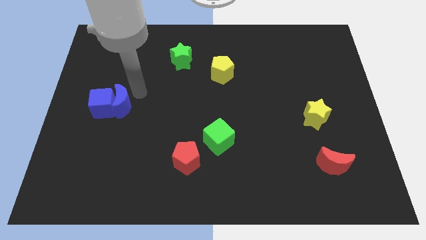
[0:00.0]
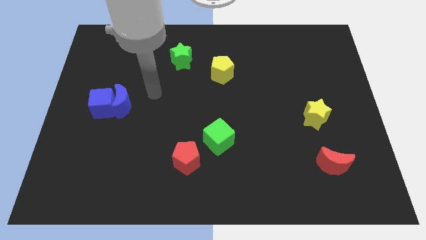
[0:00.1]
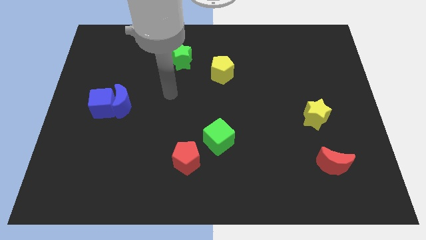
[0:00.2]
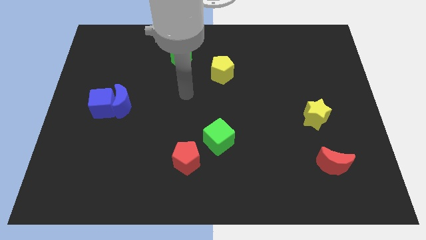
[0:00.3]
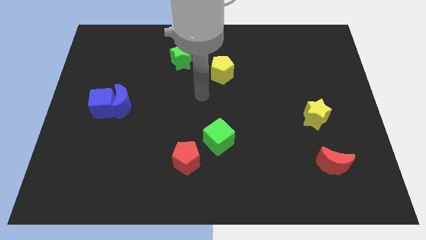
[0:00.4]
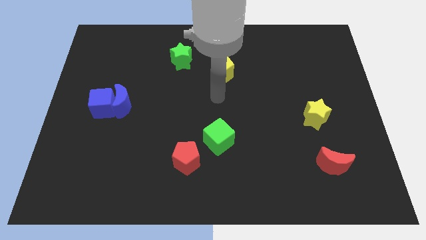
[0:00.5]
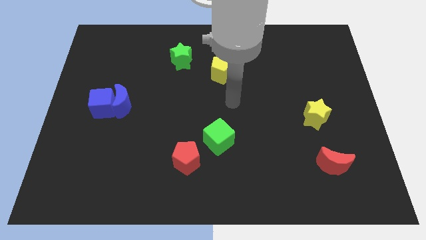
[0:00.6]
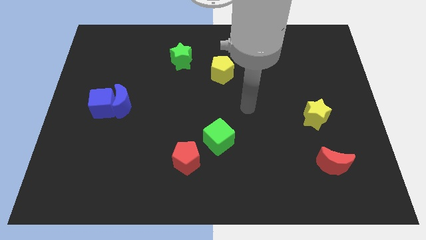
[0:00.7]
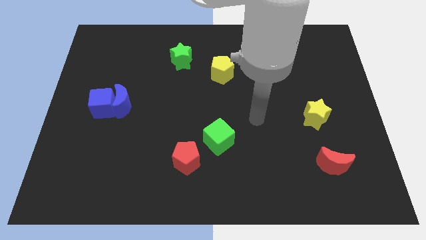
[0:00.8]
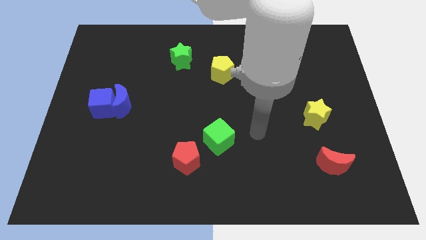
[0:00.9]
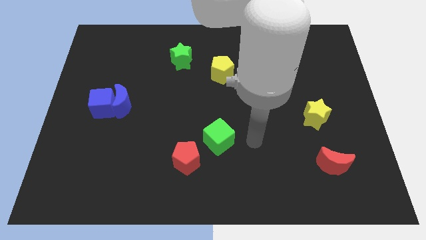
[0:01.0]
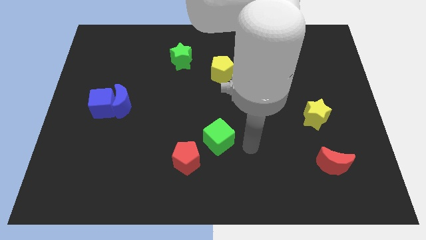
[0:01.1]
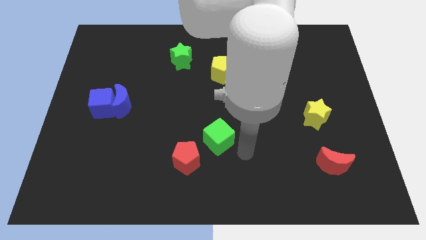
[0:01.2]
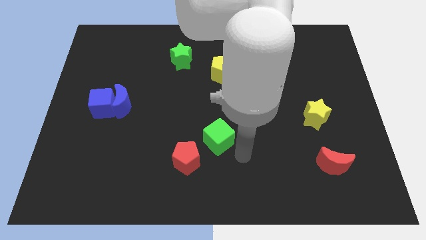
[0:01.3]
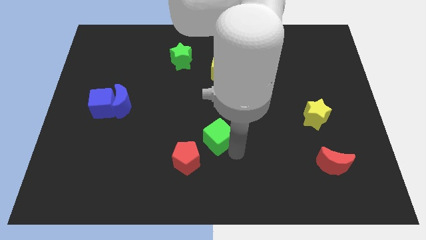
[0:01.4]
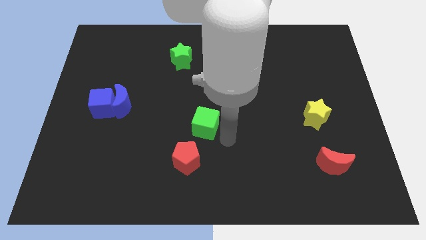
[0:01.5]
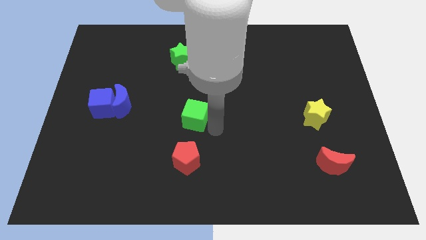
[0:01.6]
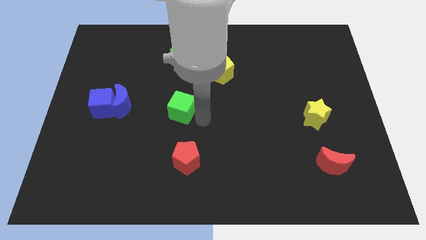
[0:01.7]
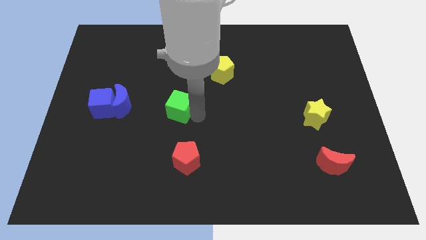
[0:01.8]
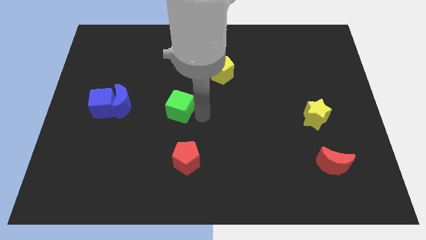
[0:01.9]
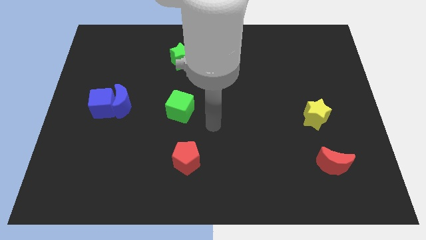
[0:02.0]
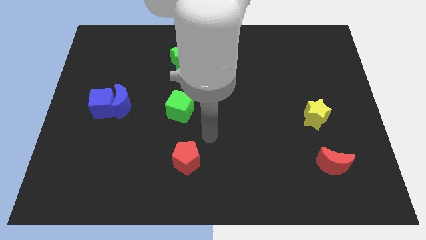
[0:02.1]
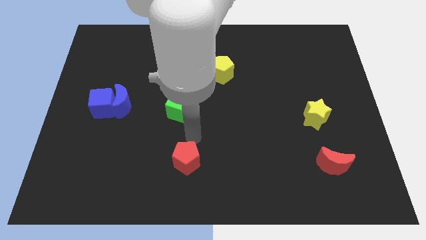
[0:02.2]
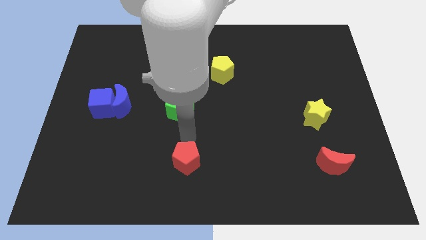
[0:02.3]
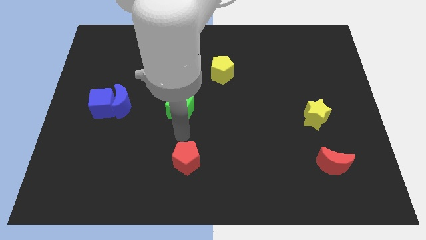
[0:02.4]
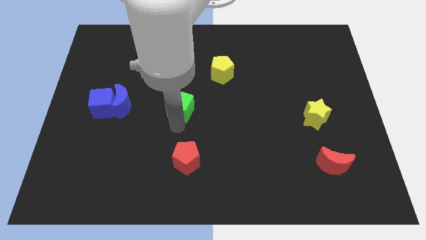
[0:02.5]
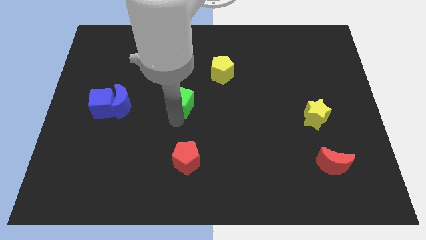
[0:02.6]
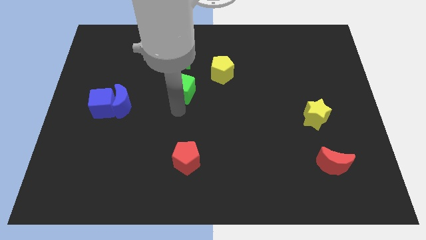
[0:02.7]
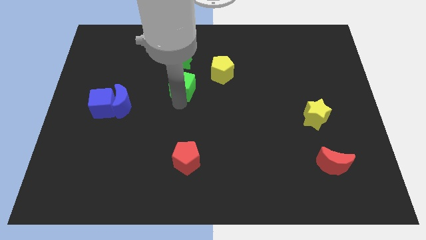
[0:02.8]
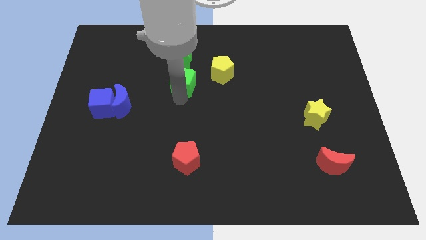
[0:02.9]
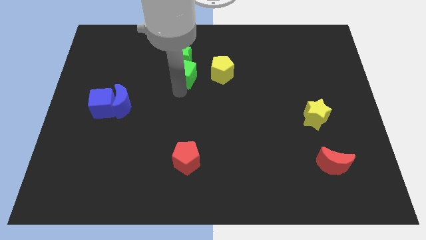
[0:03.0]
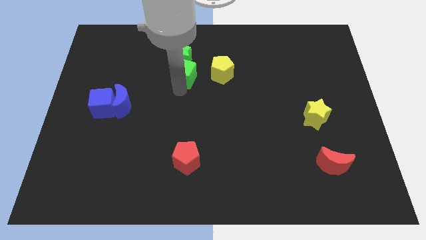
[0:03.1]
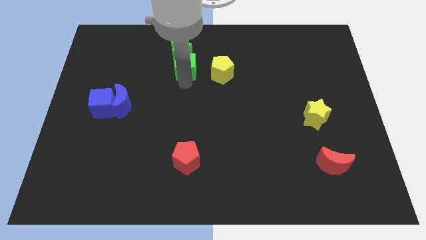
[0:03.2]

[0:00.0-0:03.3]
place the green cube to the left of the yellow pentagon

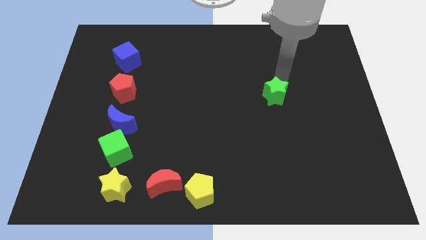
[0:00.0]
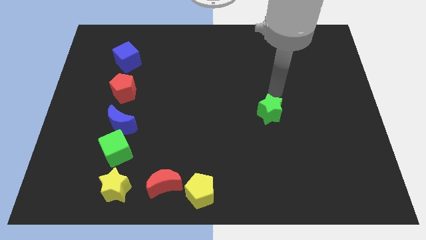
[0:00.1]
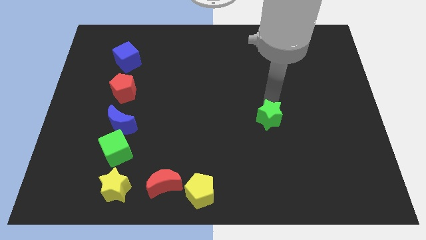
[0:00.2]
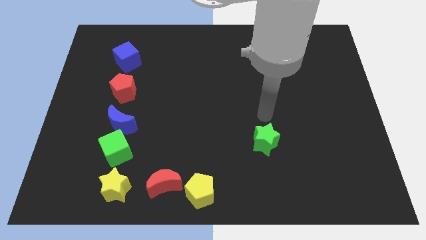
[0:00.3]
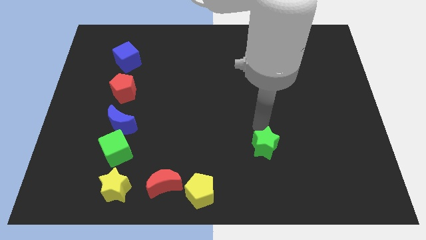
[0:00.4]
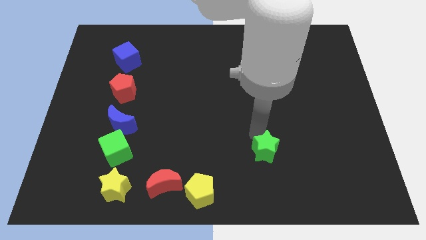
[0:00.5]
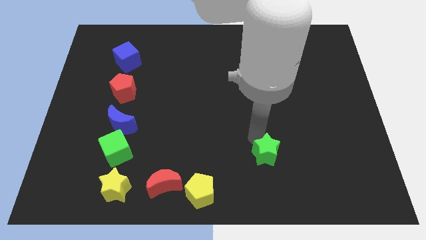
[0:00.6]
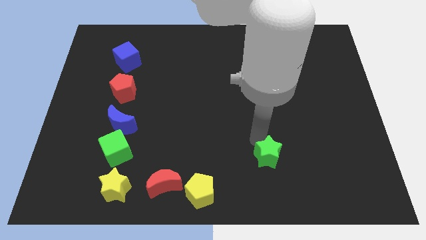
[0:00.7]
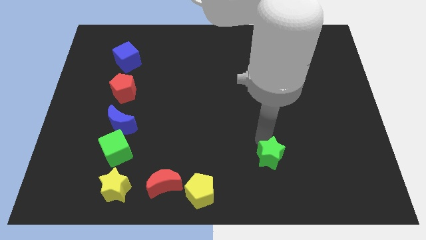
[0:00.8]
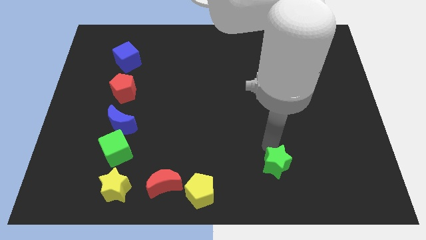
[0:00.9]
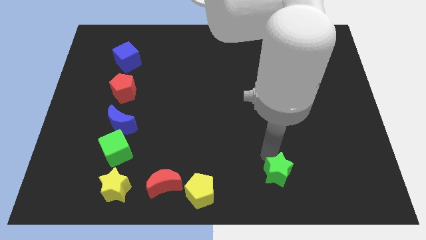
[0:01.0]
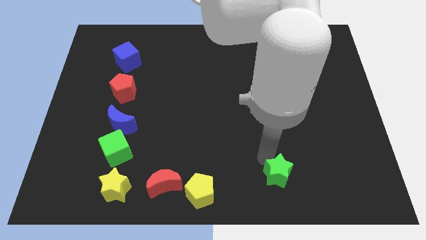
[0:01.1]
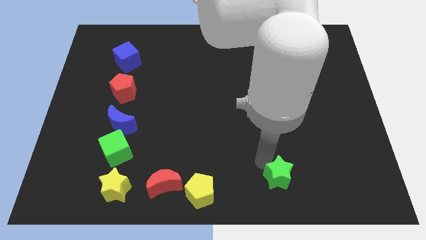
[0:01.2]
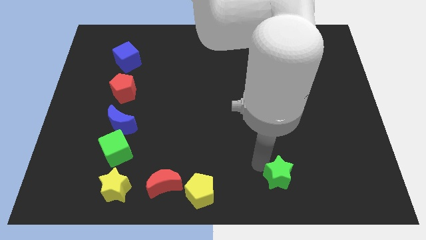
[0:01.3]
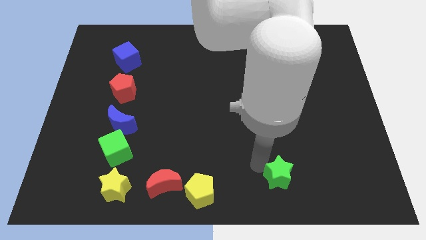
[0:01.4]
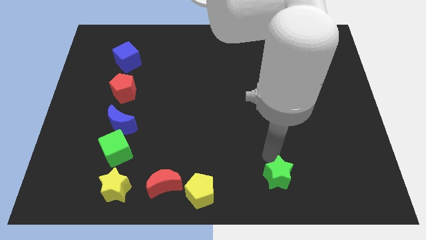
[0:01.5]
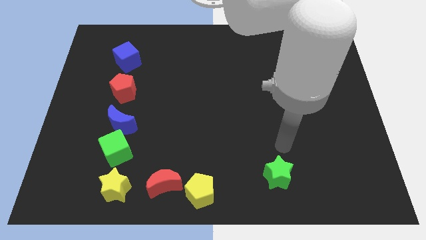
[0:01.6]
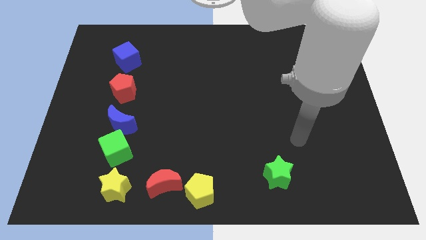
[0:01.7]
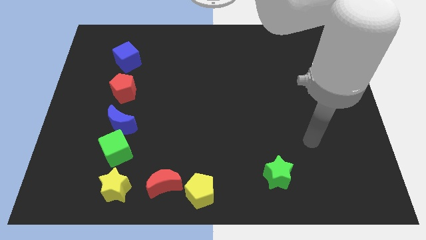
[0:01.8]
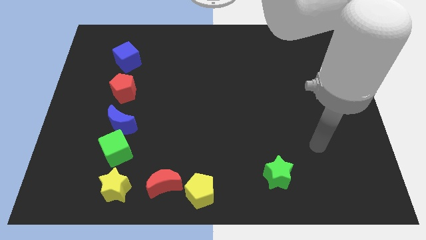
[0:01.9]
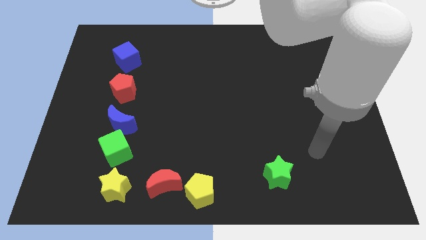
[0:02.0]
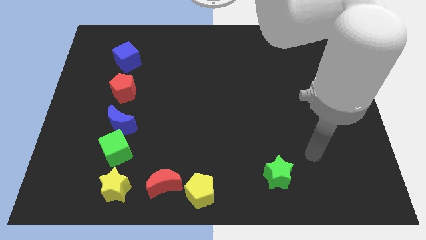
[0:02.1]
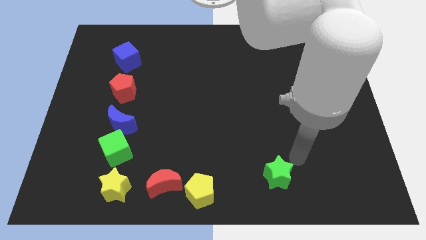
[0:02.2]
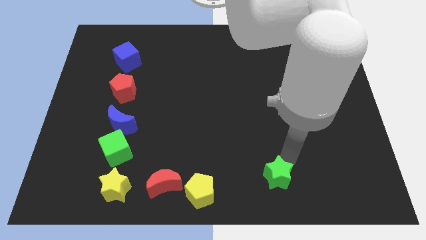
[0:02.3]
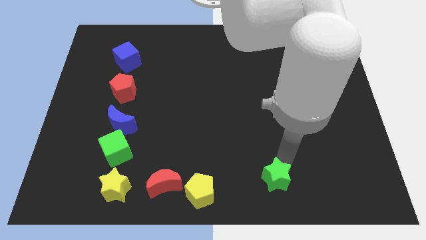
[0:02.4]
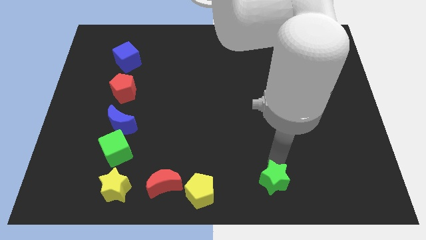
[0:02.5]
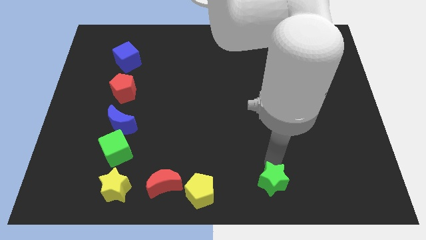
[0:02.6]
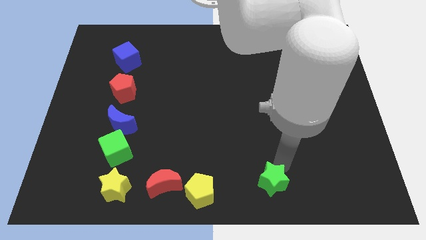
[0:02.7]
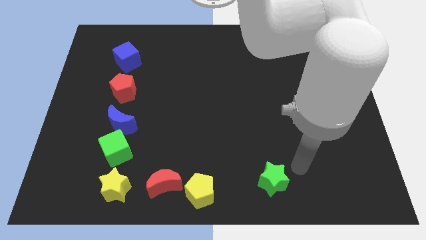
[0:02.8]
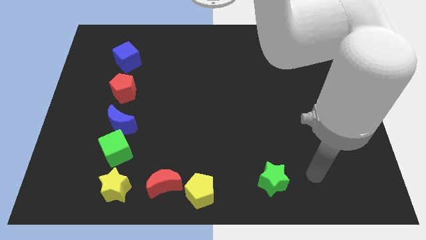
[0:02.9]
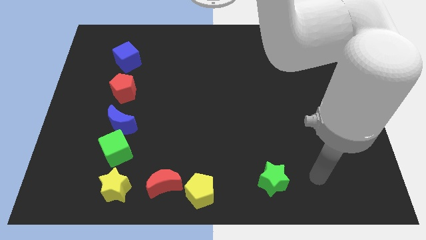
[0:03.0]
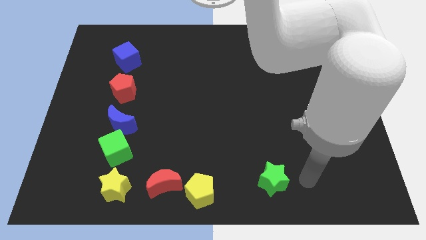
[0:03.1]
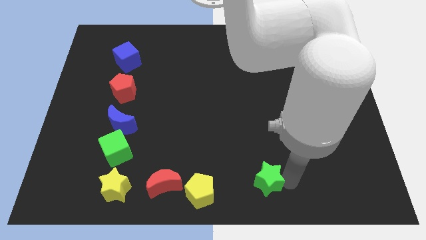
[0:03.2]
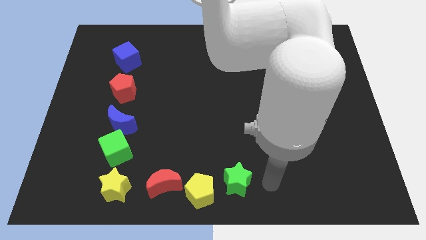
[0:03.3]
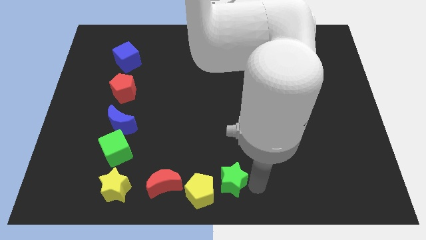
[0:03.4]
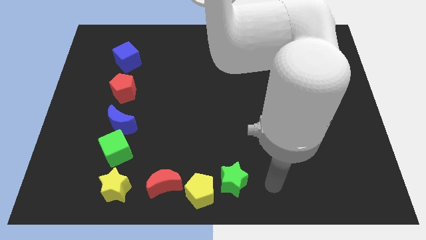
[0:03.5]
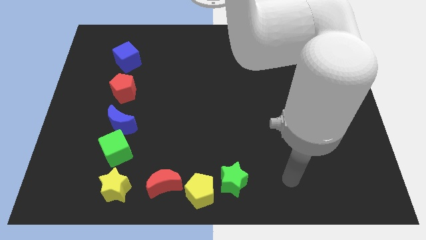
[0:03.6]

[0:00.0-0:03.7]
place the green star to the right of yellow pentagon

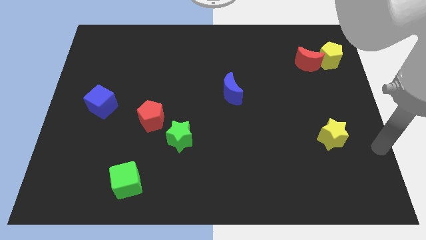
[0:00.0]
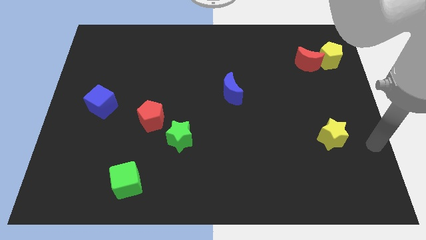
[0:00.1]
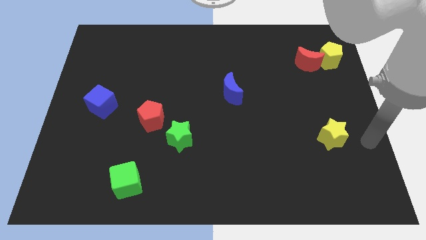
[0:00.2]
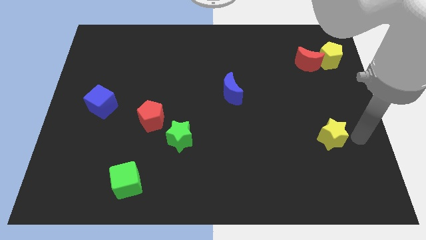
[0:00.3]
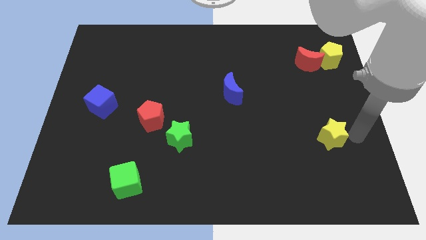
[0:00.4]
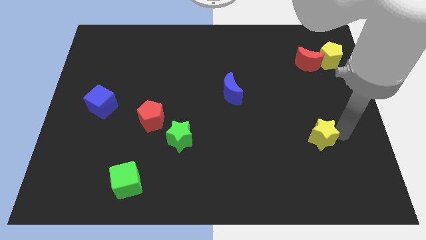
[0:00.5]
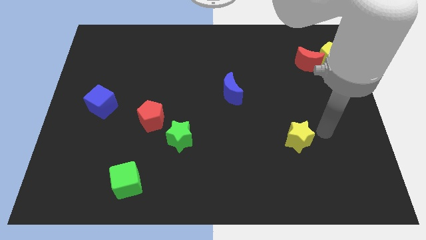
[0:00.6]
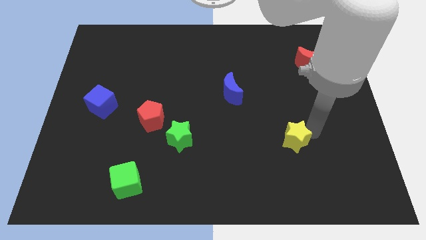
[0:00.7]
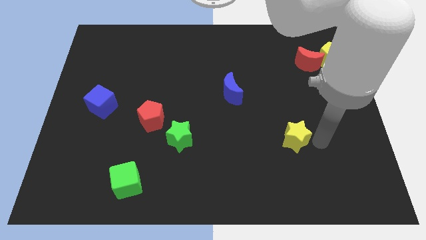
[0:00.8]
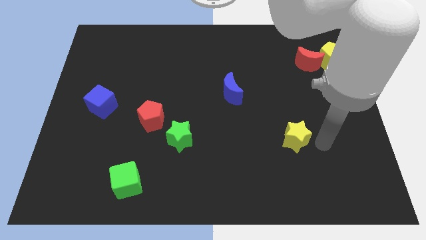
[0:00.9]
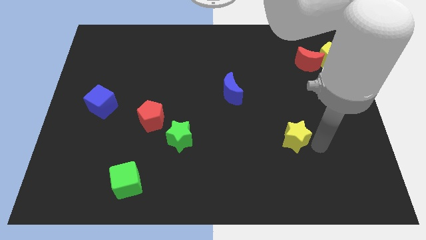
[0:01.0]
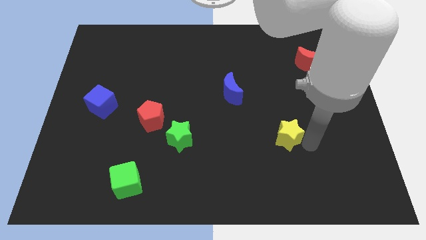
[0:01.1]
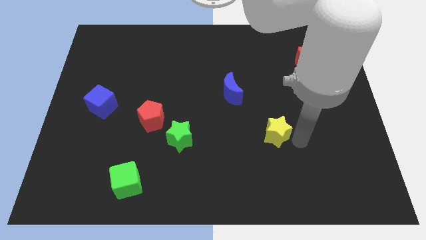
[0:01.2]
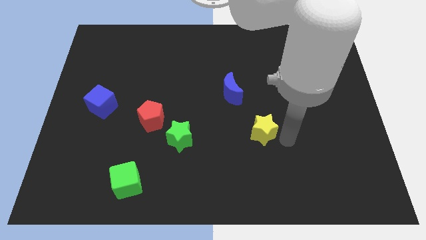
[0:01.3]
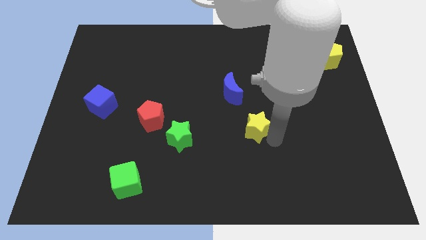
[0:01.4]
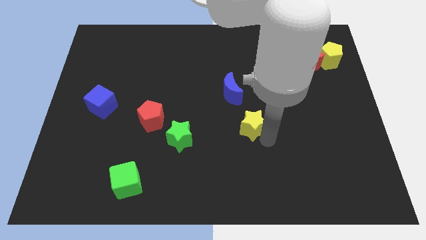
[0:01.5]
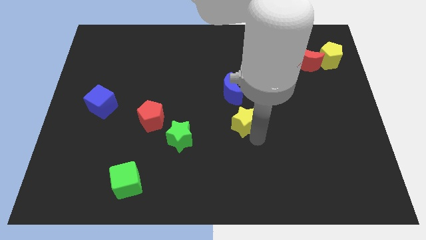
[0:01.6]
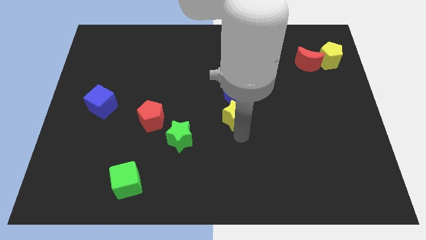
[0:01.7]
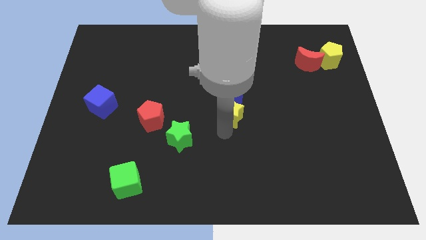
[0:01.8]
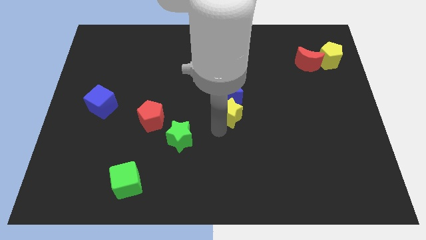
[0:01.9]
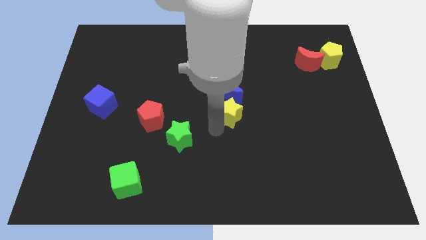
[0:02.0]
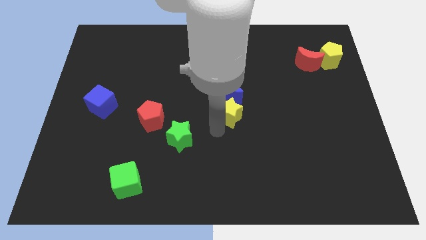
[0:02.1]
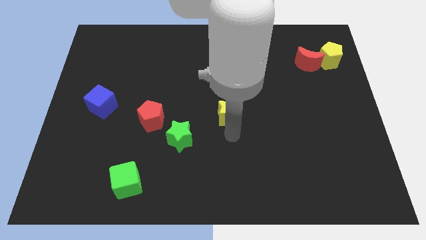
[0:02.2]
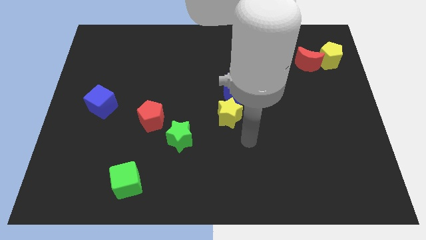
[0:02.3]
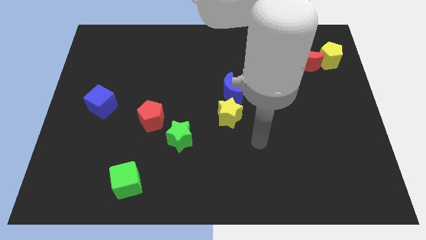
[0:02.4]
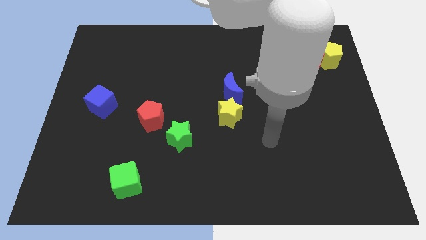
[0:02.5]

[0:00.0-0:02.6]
move the yellow star to the bottom of the blue crescent
